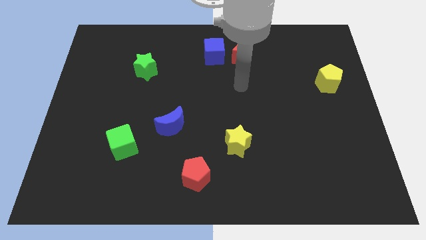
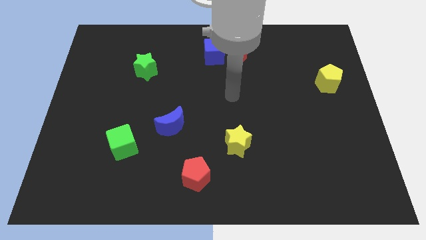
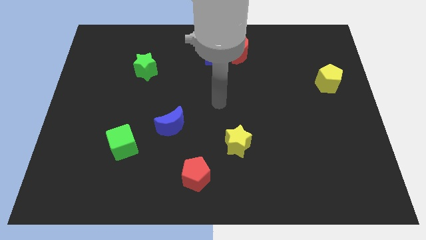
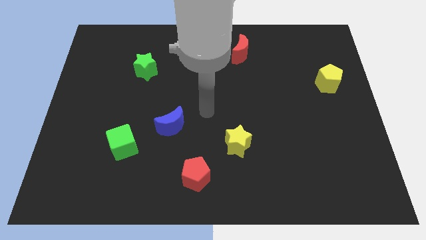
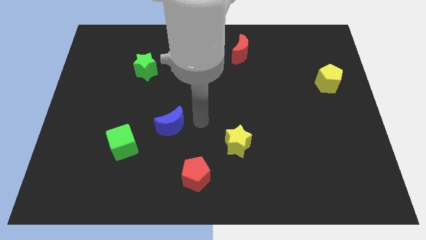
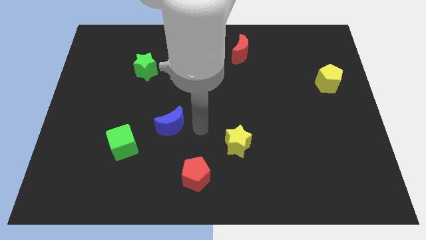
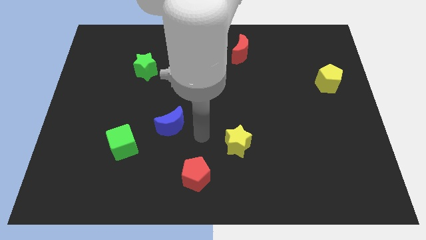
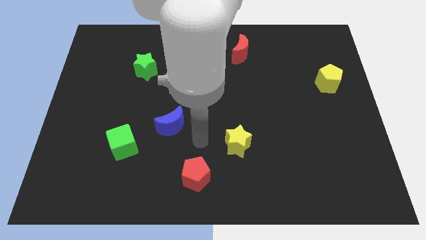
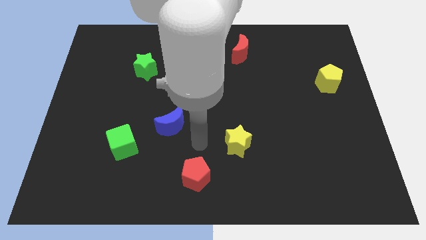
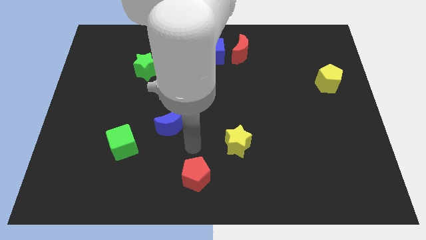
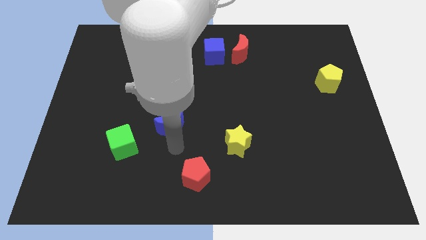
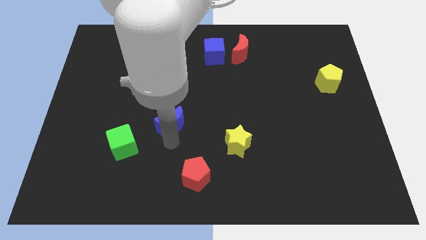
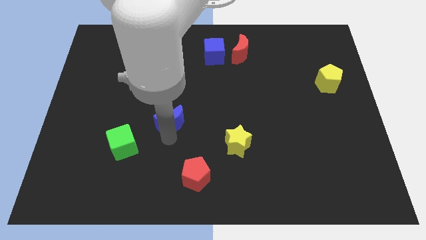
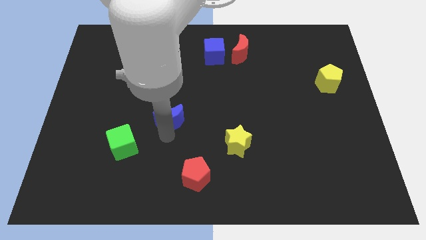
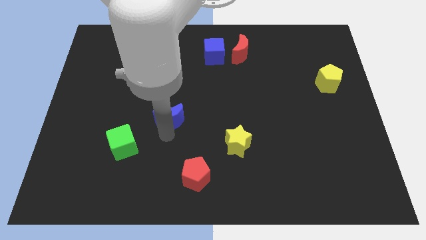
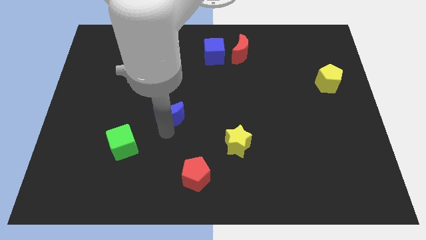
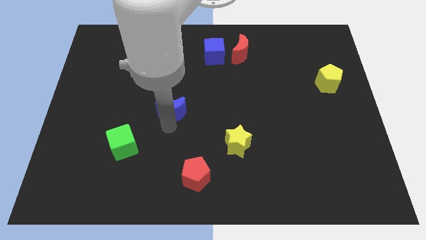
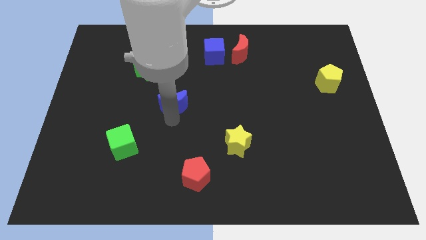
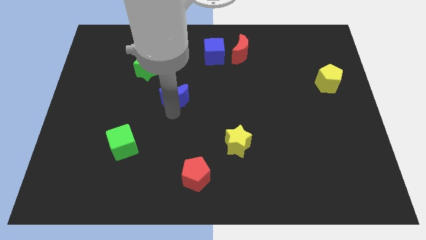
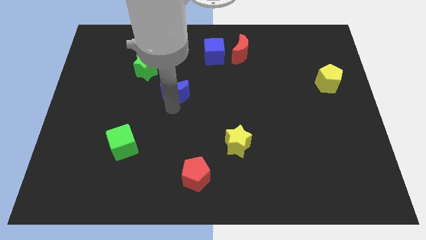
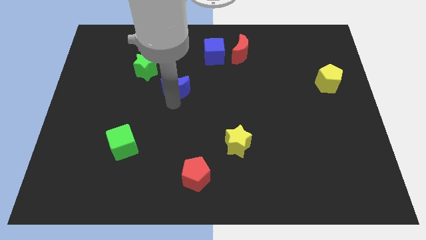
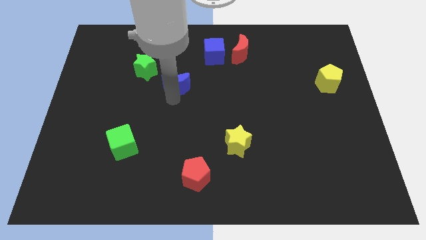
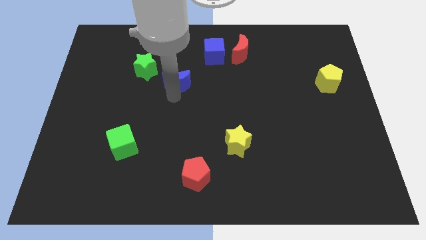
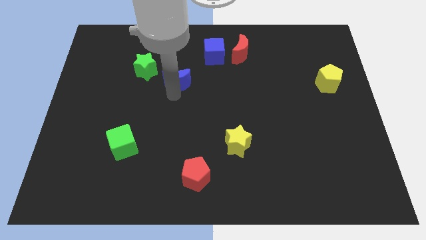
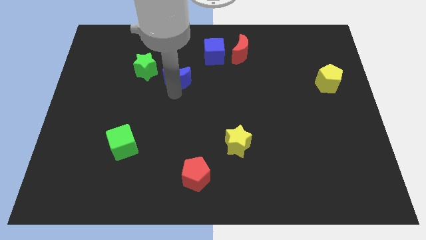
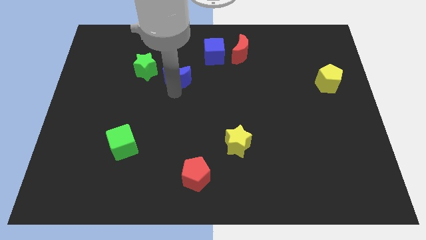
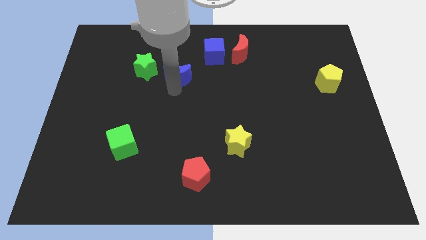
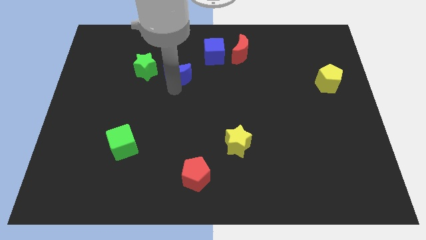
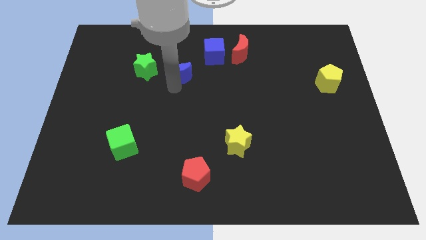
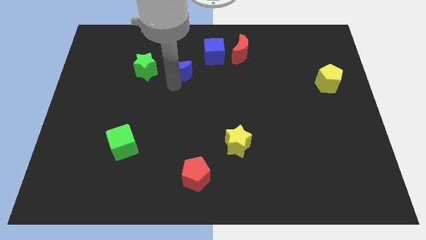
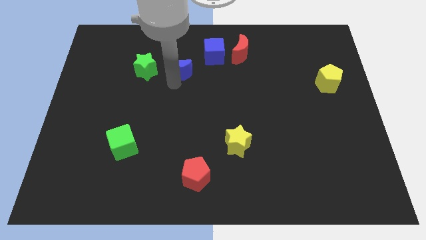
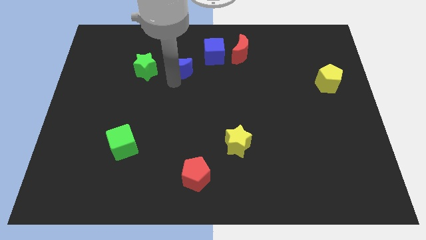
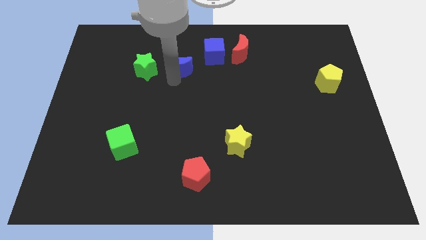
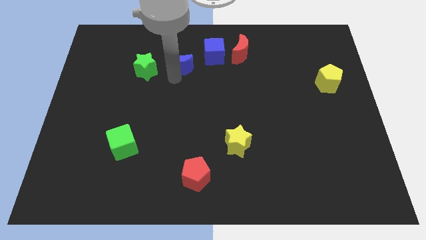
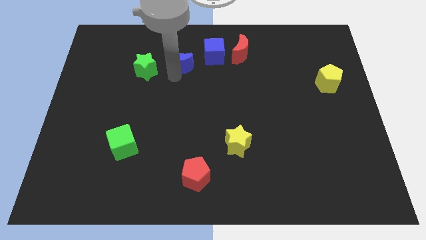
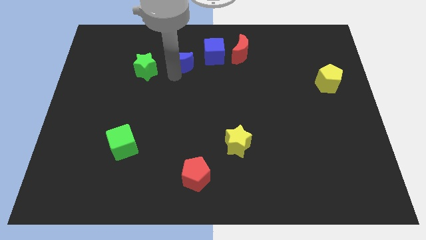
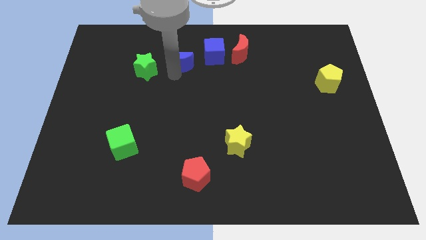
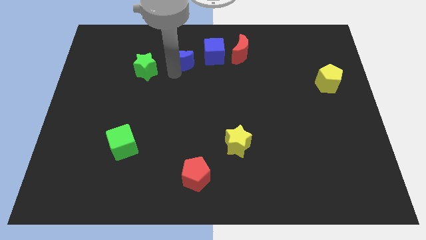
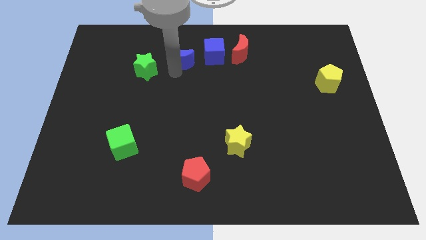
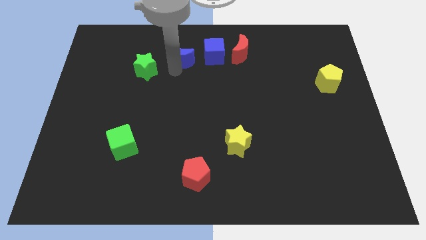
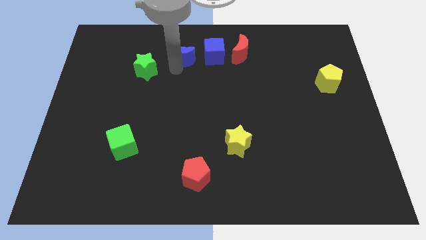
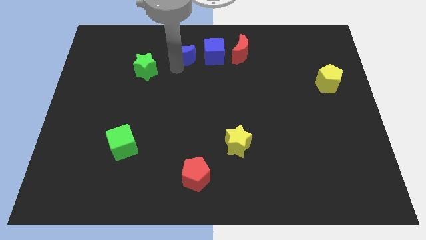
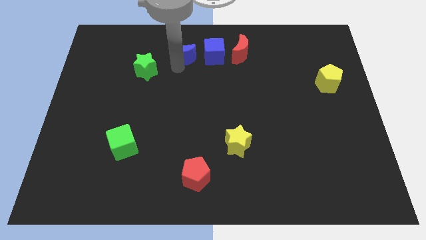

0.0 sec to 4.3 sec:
move the blue crescent to the left of the blue cube

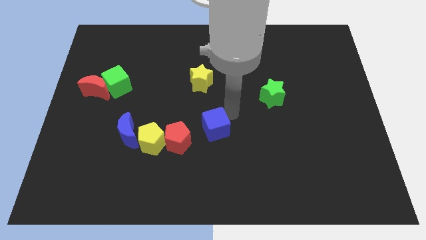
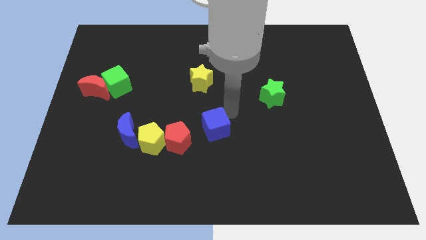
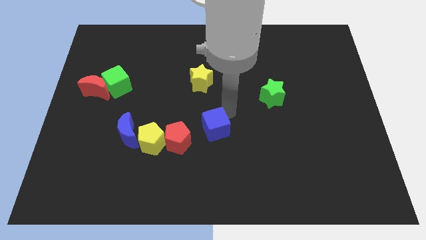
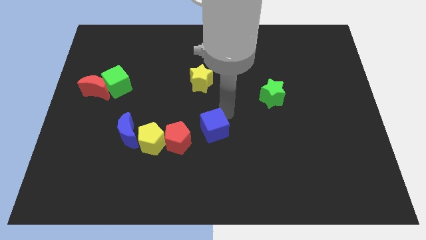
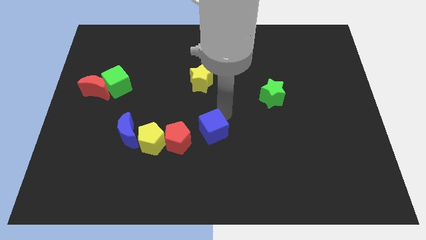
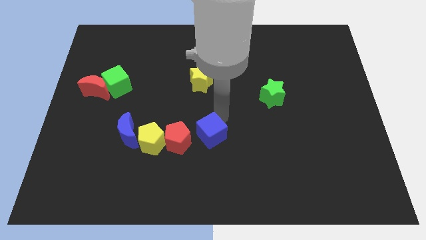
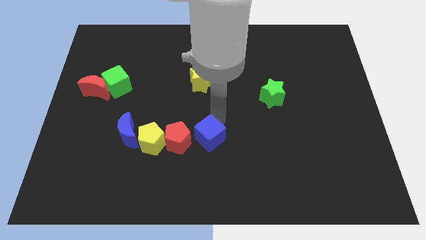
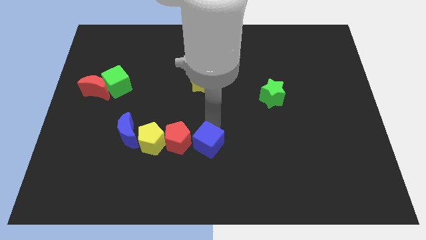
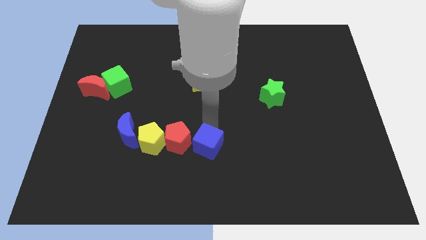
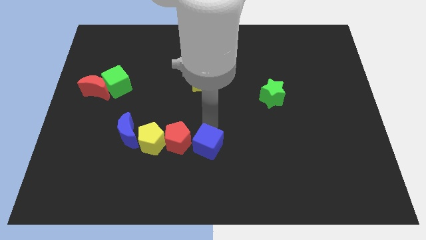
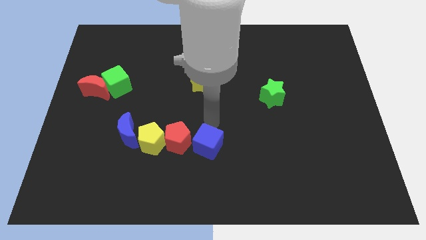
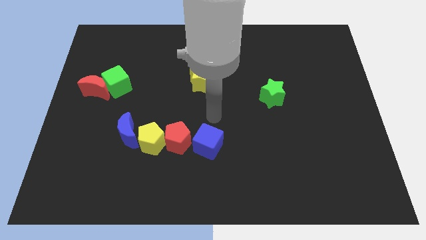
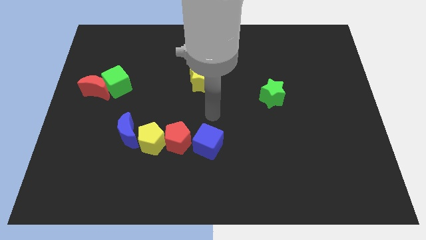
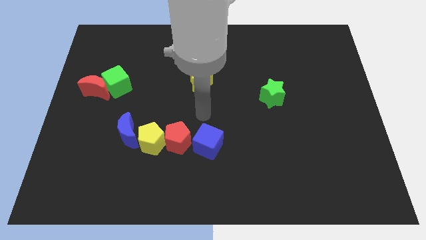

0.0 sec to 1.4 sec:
move the blue cube towards the right of the red pentagon

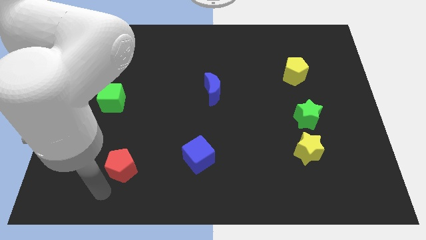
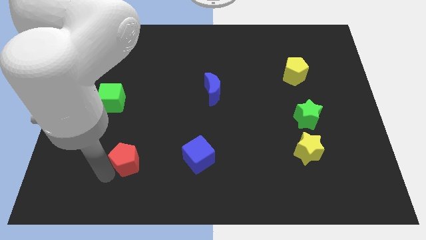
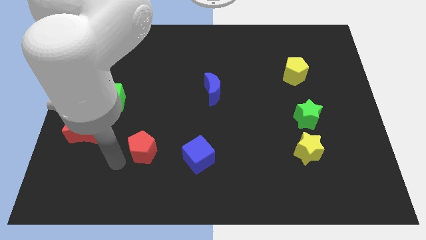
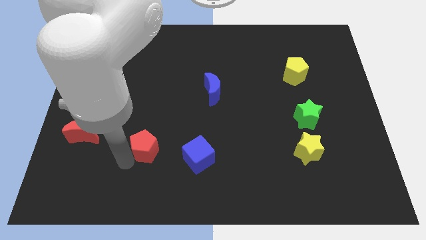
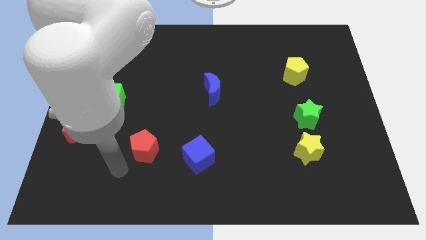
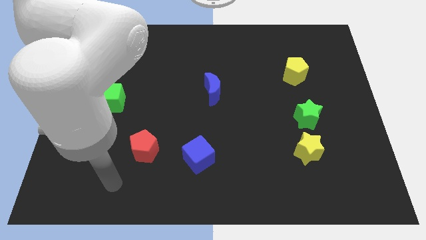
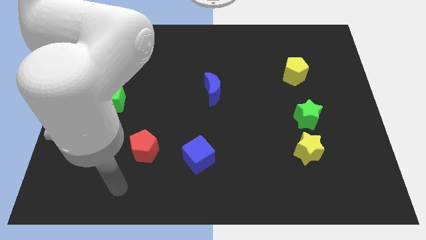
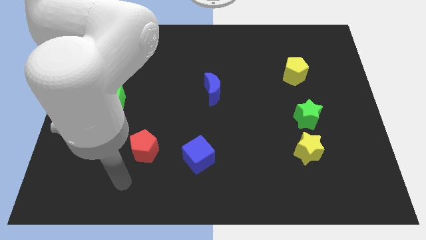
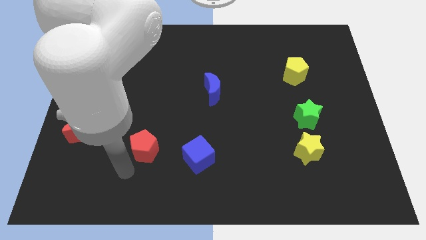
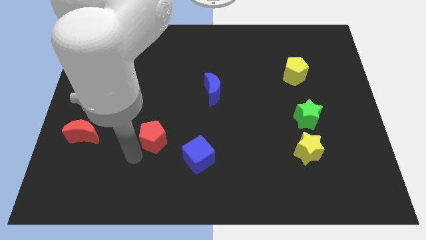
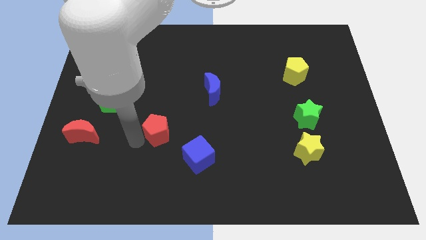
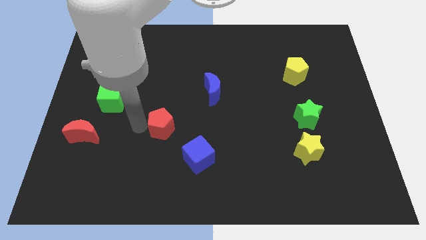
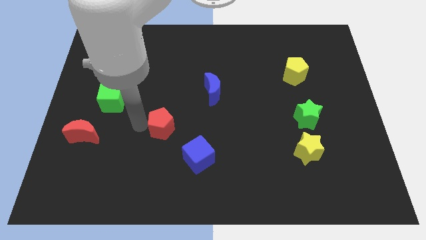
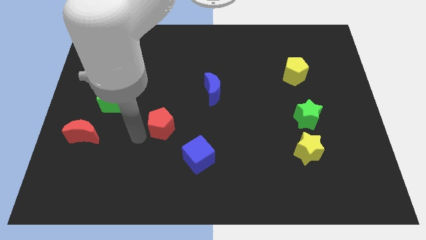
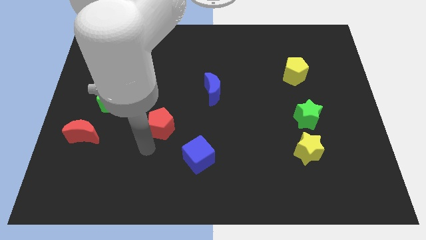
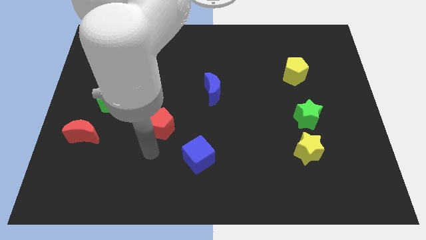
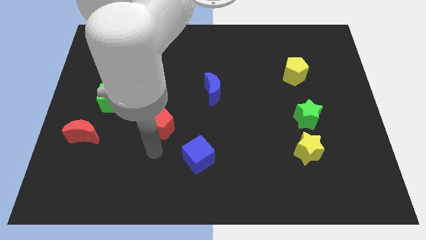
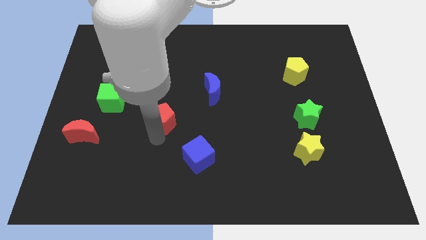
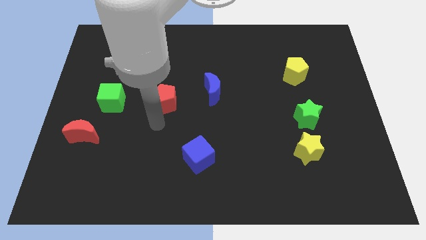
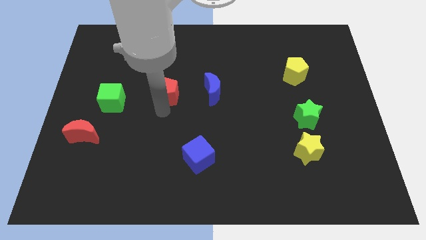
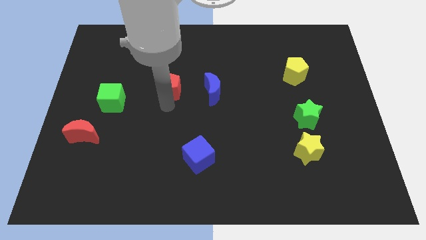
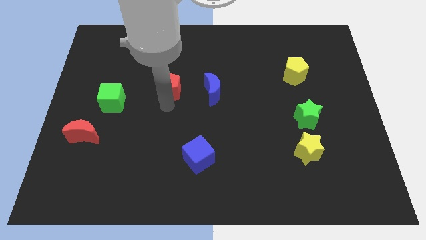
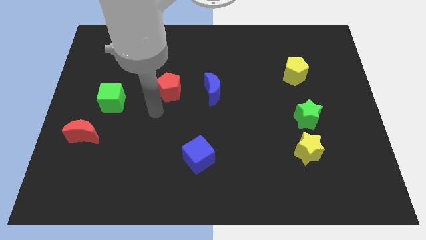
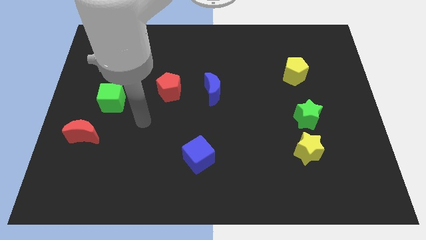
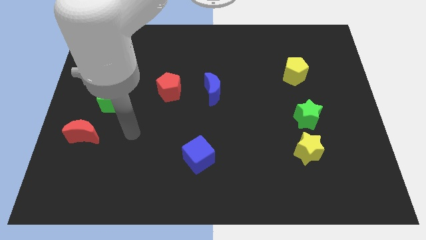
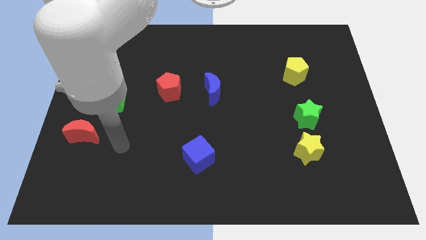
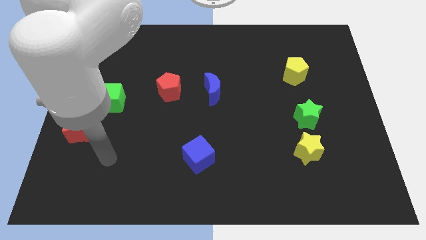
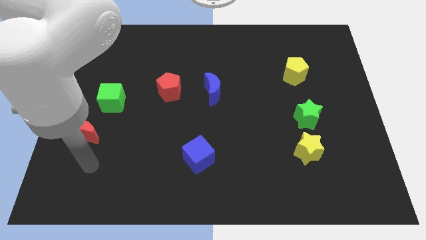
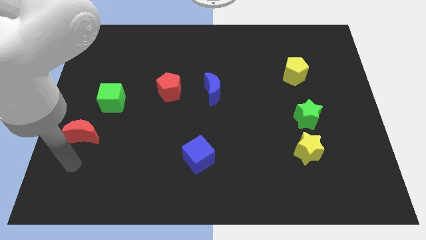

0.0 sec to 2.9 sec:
place the red pentagon left to the blue crescent

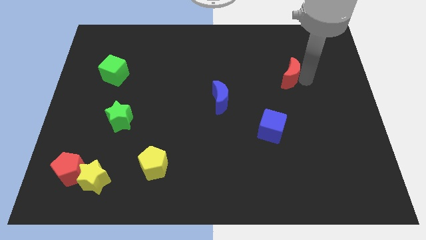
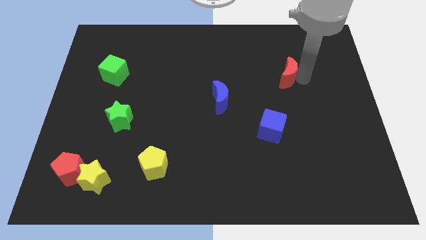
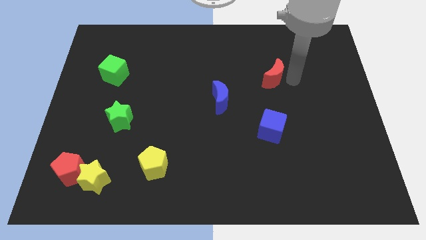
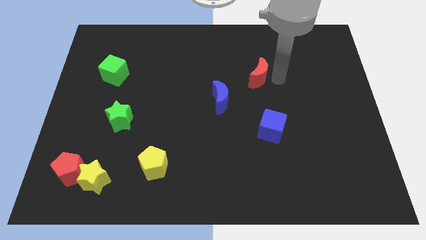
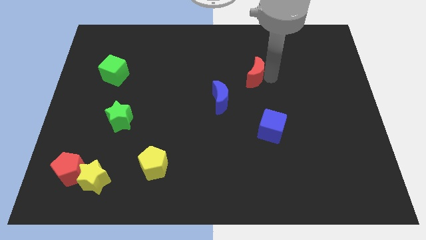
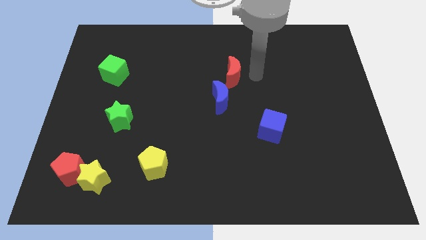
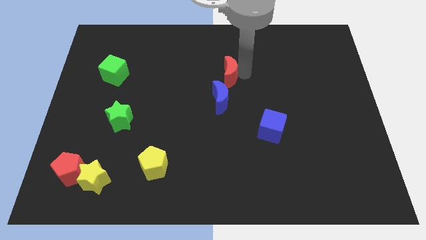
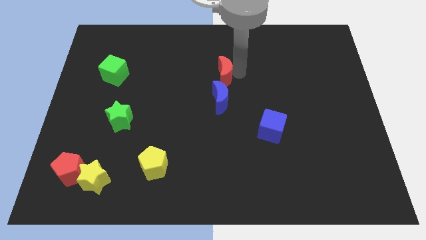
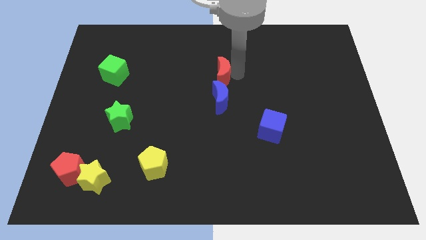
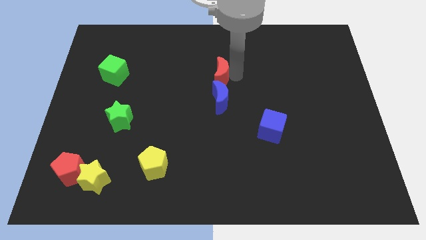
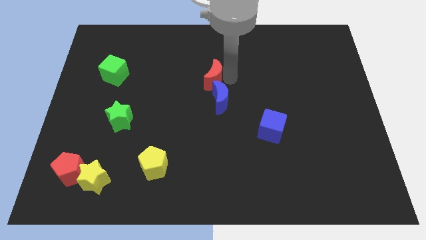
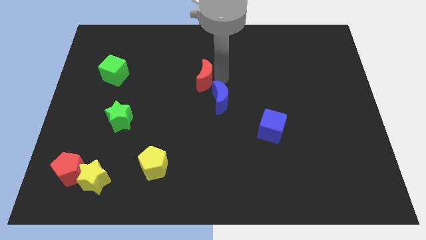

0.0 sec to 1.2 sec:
place the red moon above the blue moon
